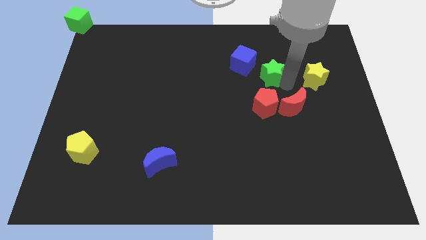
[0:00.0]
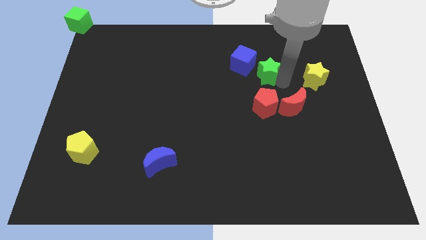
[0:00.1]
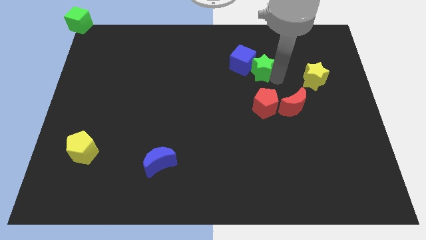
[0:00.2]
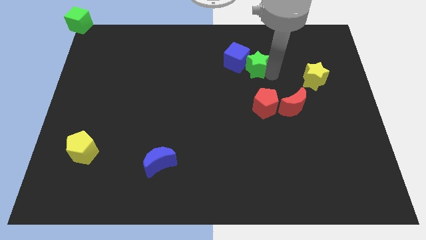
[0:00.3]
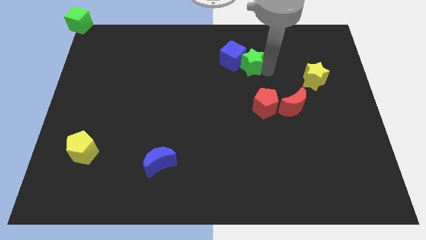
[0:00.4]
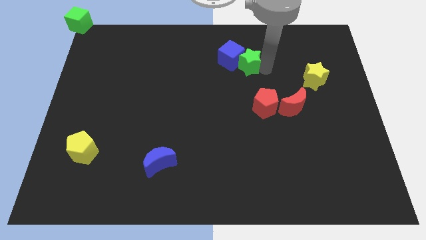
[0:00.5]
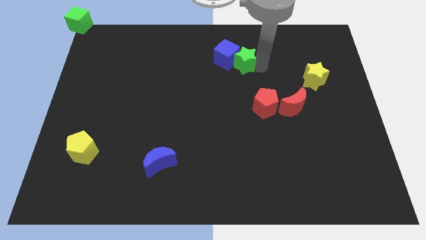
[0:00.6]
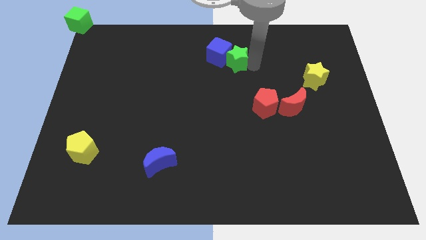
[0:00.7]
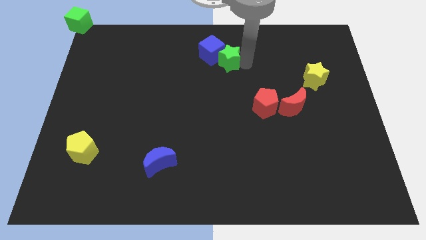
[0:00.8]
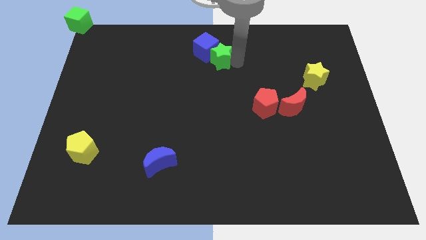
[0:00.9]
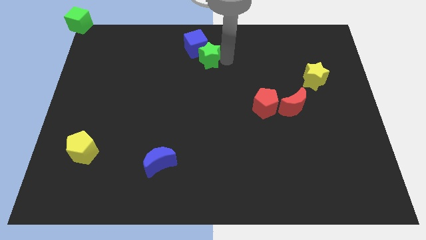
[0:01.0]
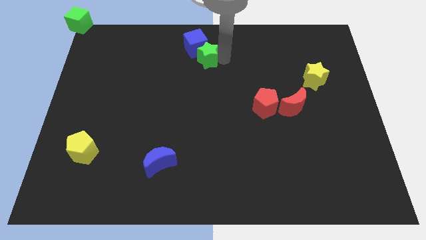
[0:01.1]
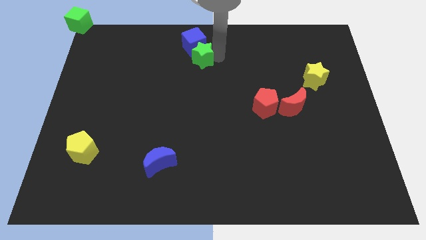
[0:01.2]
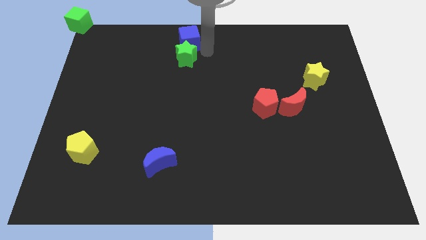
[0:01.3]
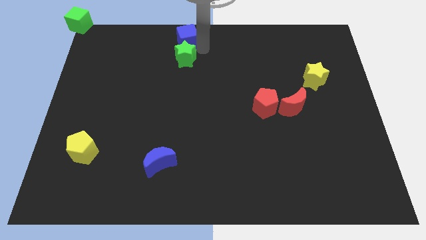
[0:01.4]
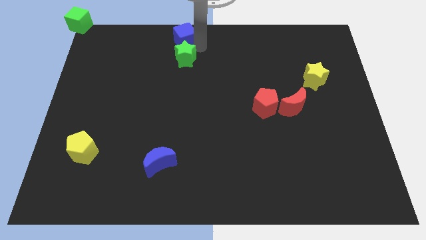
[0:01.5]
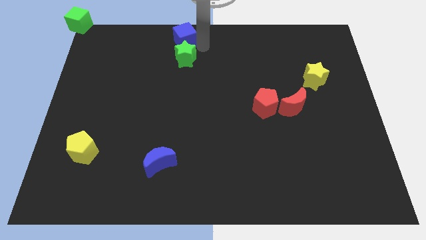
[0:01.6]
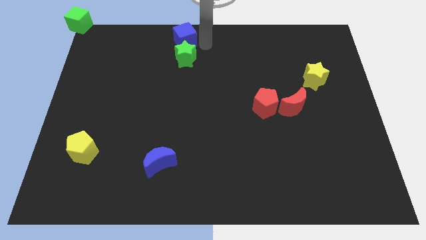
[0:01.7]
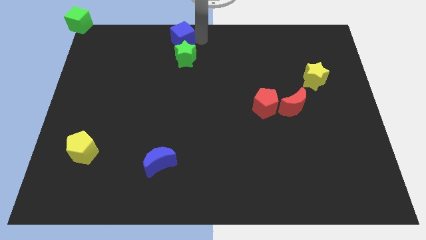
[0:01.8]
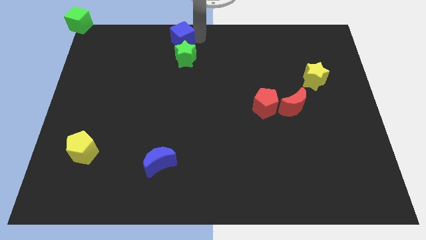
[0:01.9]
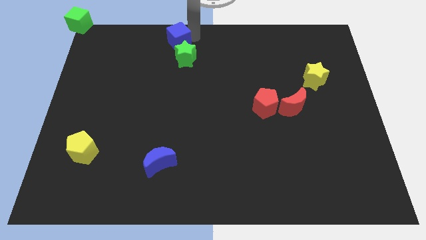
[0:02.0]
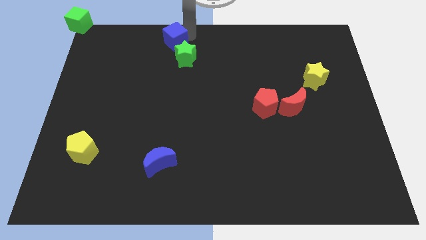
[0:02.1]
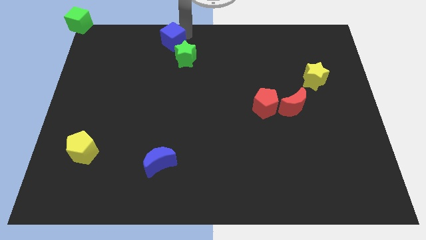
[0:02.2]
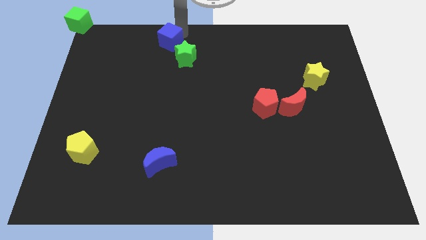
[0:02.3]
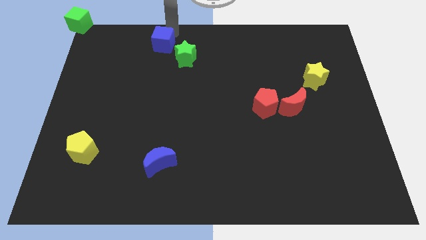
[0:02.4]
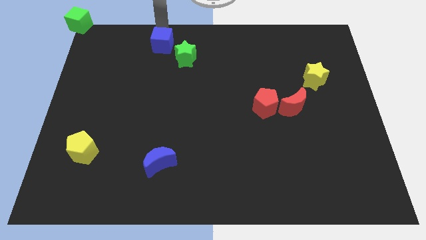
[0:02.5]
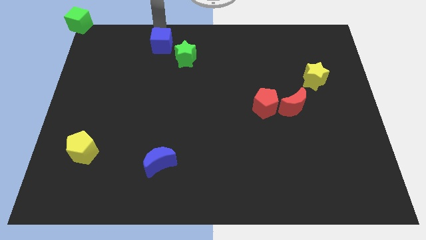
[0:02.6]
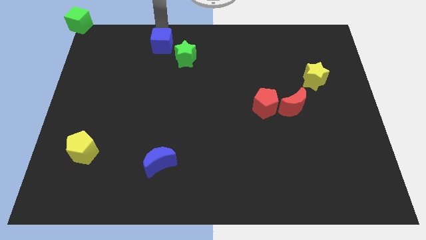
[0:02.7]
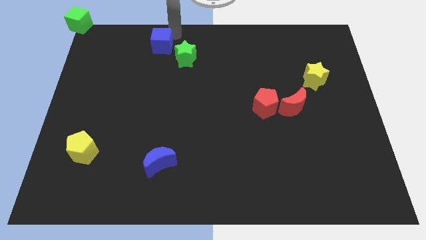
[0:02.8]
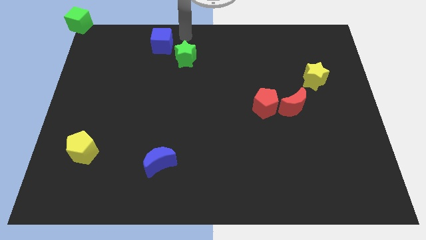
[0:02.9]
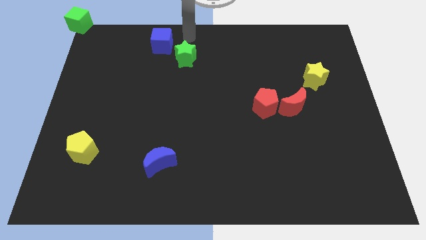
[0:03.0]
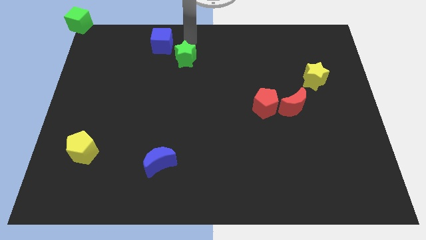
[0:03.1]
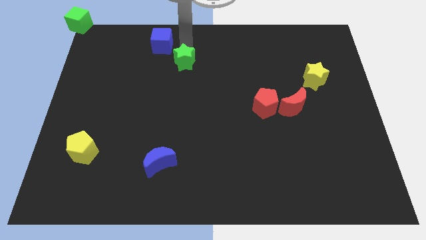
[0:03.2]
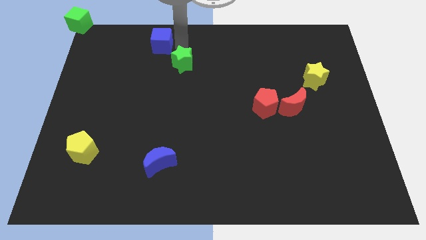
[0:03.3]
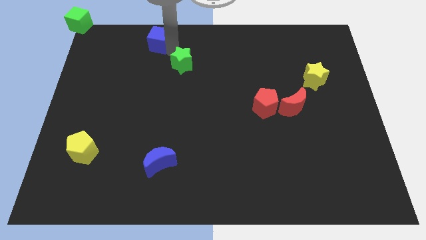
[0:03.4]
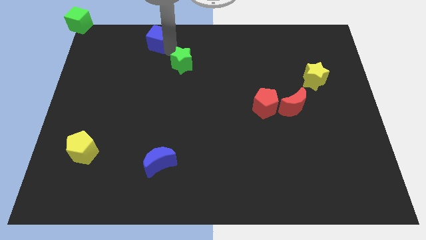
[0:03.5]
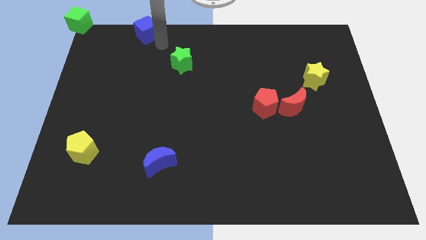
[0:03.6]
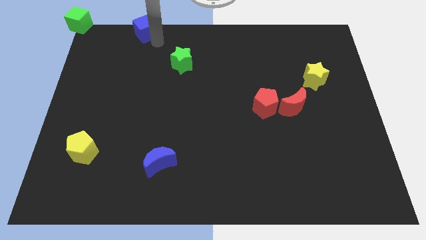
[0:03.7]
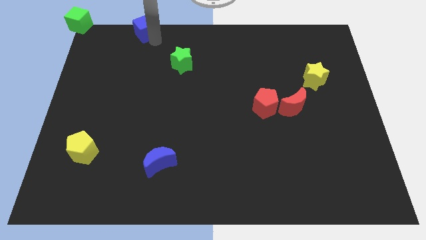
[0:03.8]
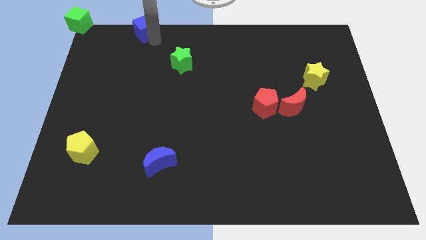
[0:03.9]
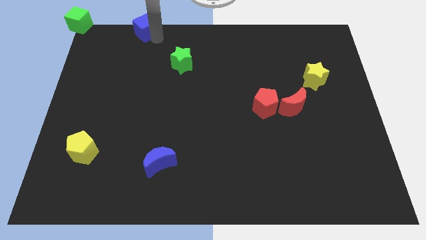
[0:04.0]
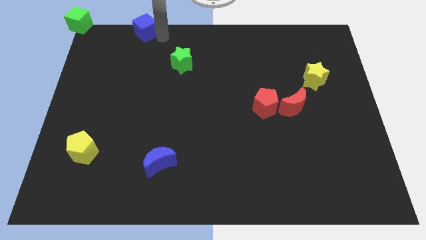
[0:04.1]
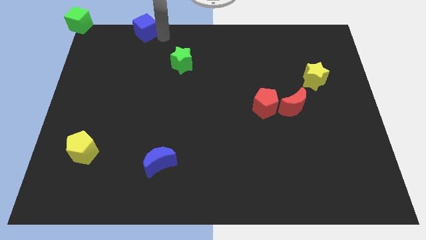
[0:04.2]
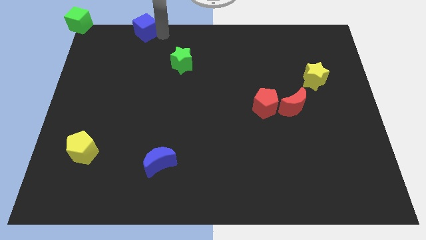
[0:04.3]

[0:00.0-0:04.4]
place the blue cube right to the green cube

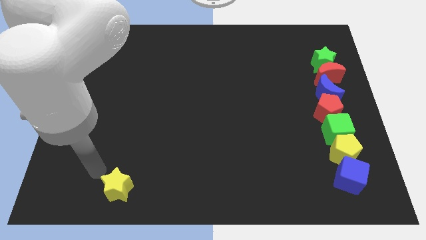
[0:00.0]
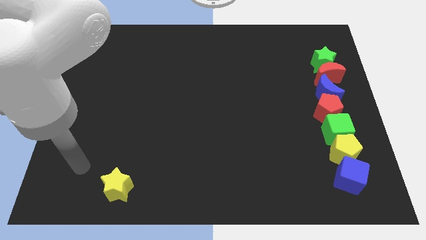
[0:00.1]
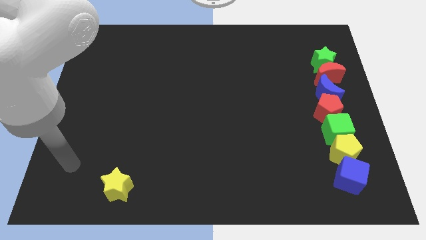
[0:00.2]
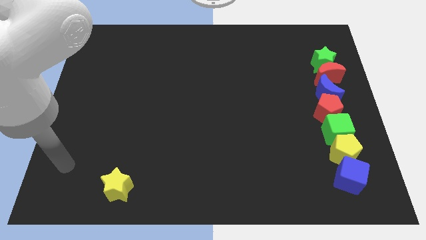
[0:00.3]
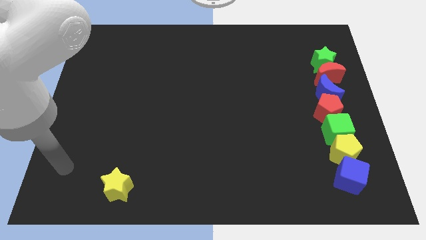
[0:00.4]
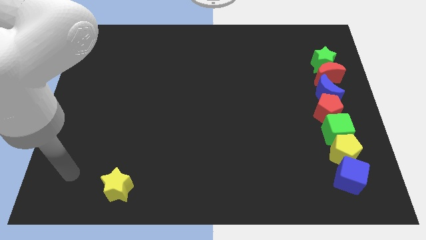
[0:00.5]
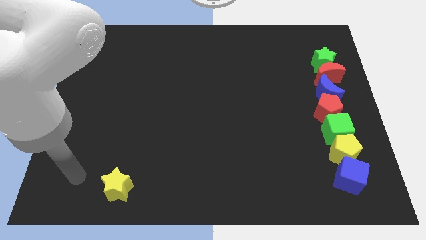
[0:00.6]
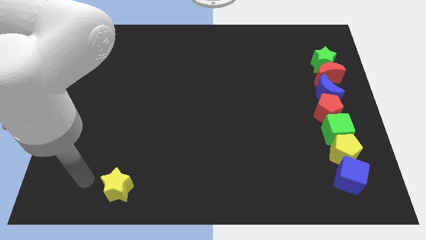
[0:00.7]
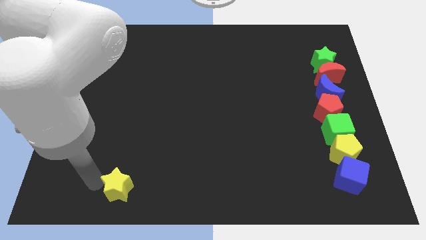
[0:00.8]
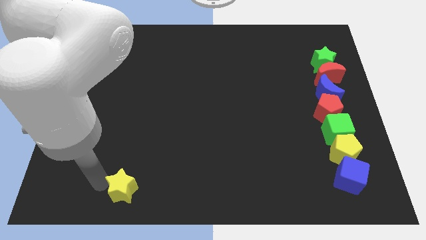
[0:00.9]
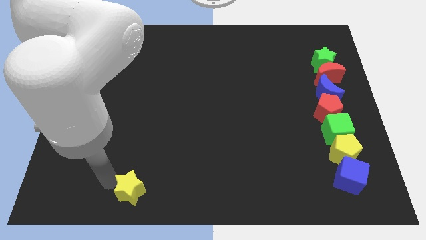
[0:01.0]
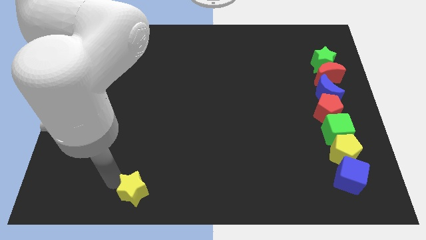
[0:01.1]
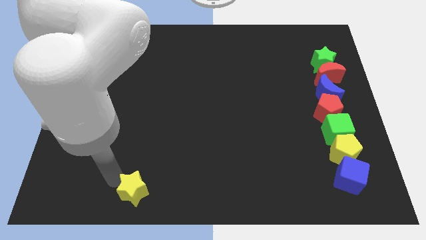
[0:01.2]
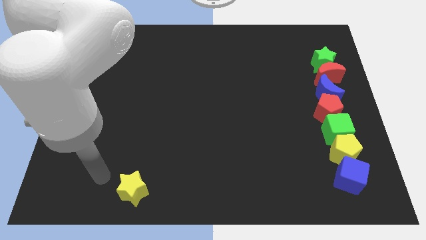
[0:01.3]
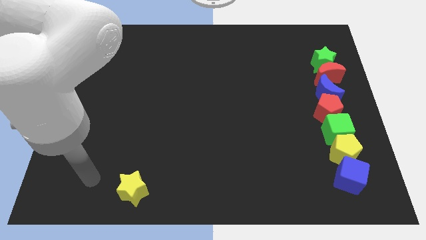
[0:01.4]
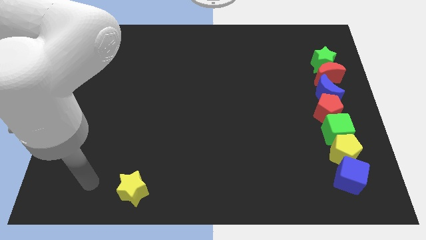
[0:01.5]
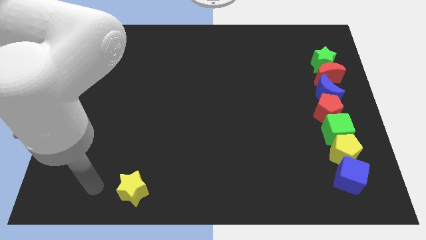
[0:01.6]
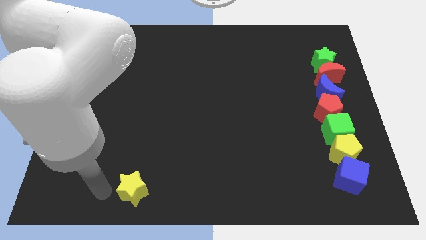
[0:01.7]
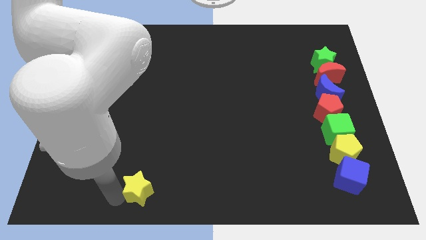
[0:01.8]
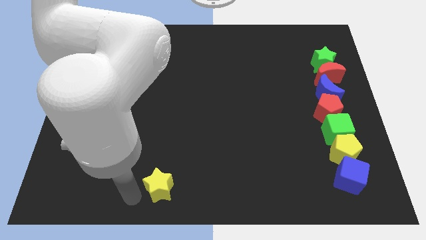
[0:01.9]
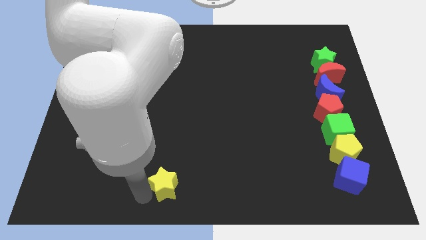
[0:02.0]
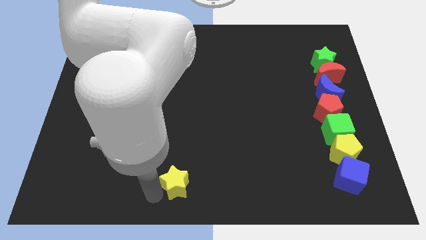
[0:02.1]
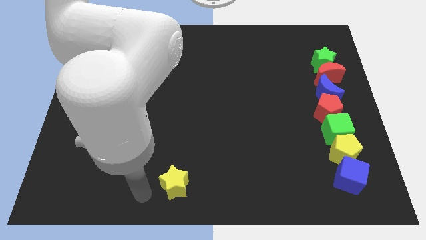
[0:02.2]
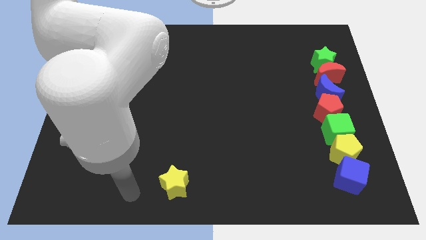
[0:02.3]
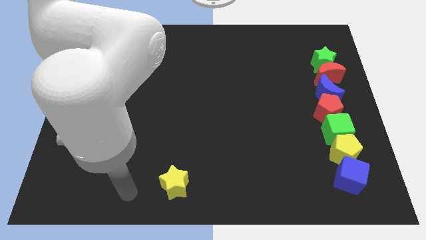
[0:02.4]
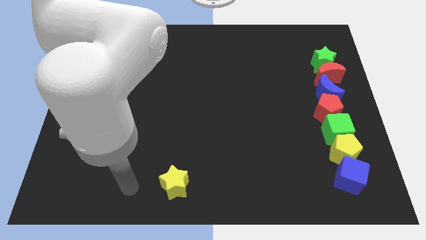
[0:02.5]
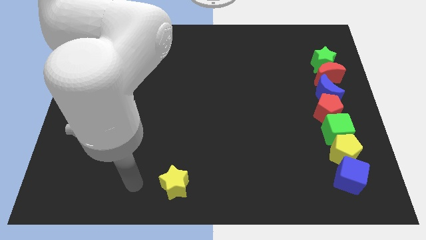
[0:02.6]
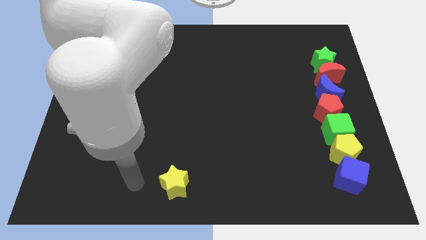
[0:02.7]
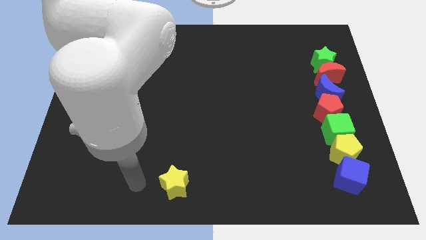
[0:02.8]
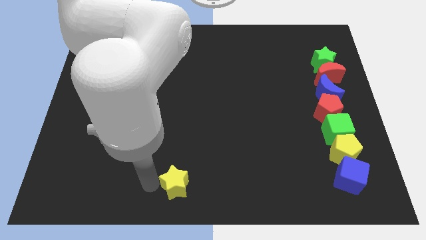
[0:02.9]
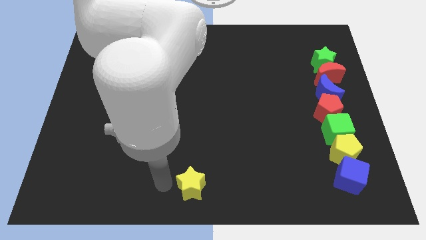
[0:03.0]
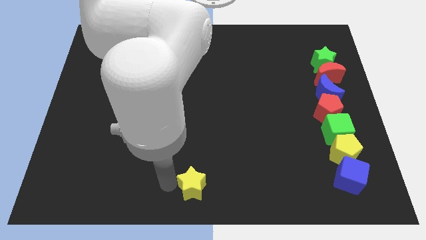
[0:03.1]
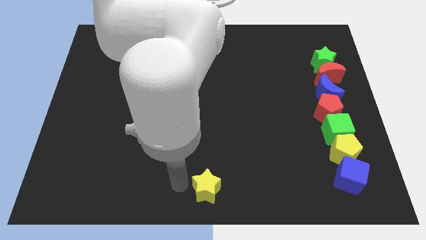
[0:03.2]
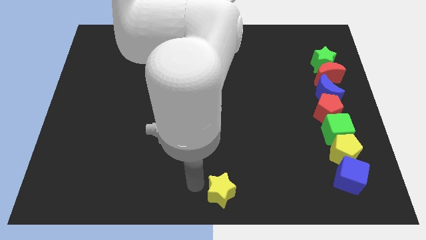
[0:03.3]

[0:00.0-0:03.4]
move yellow to the bottom middle of the board

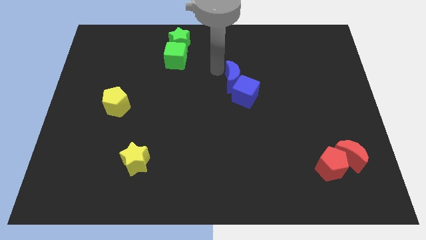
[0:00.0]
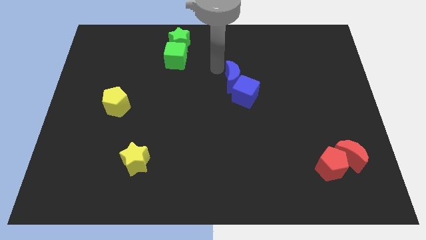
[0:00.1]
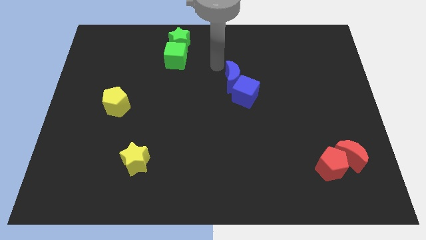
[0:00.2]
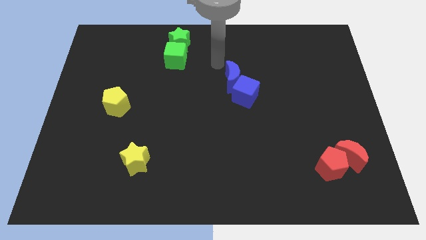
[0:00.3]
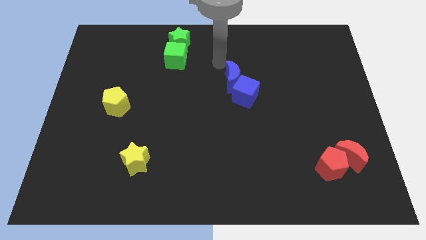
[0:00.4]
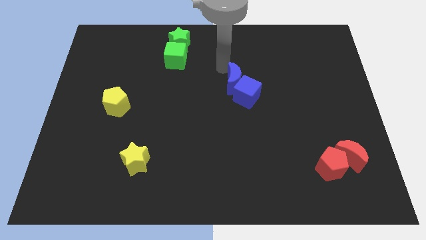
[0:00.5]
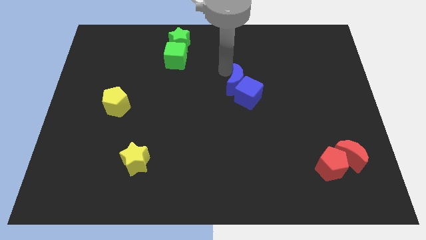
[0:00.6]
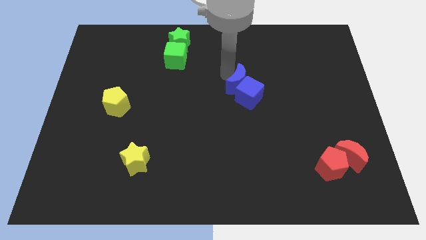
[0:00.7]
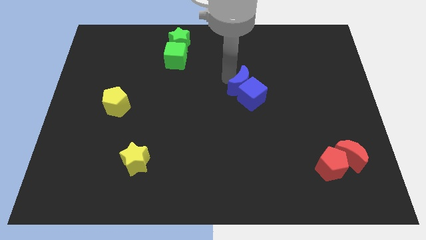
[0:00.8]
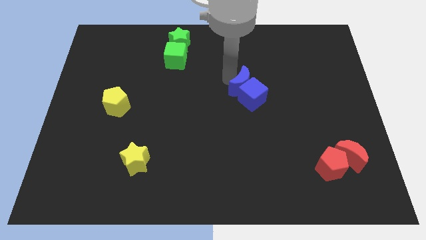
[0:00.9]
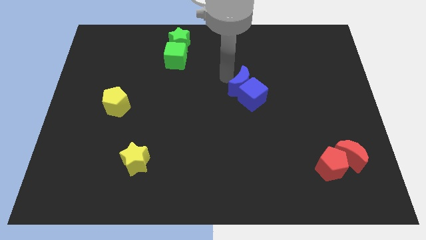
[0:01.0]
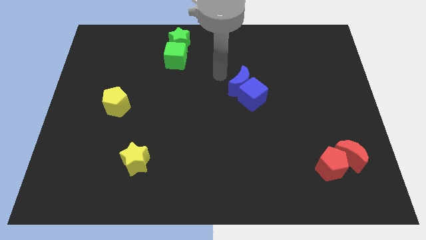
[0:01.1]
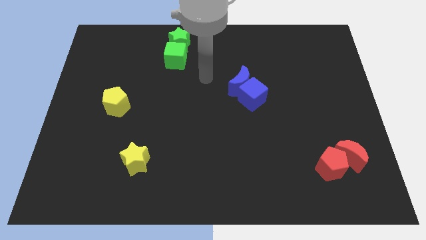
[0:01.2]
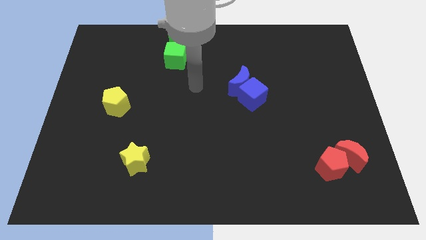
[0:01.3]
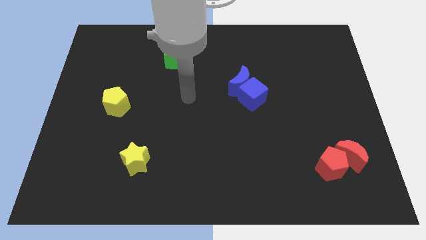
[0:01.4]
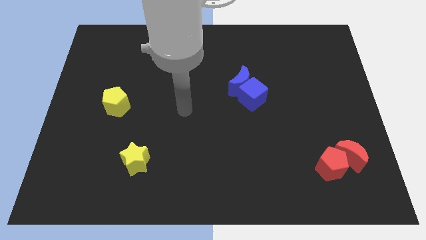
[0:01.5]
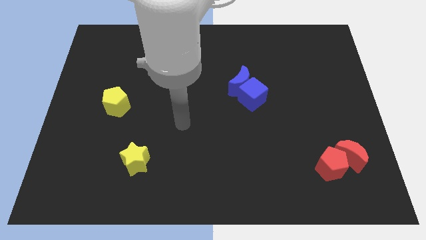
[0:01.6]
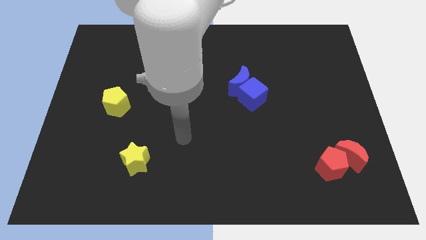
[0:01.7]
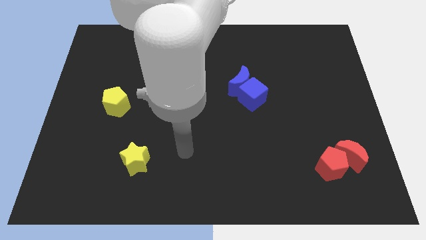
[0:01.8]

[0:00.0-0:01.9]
push the blue crescent slightly down
